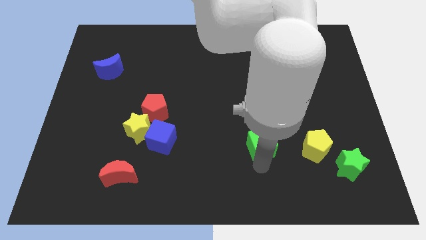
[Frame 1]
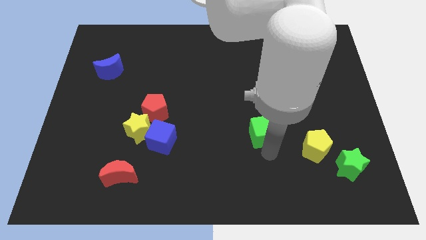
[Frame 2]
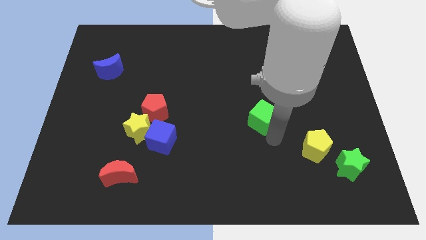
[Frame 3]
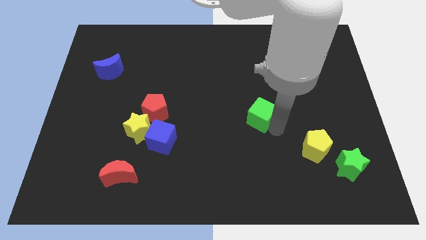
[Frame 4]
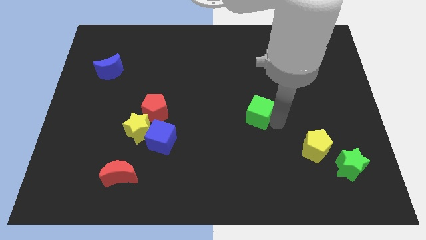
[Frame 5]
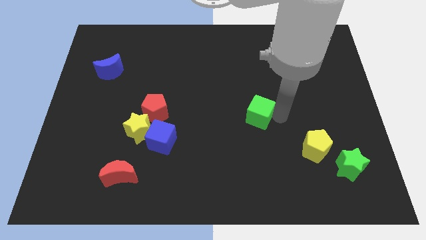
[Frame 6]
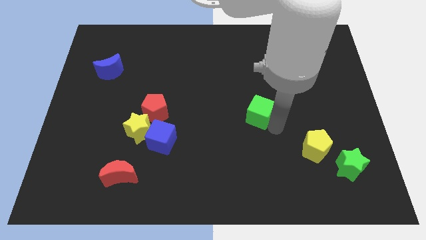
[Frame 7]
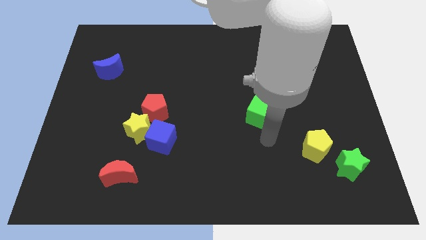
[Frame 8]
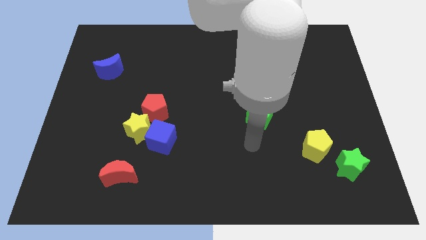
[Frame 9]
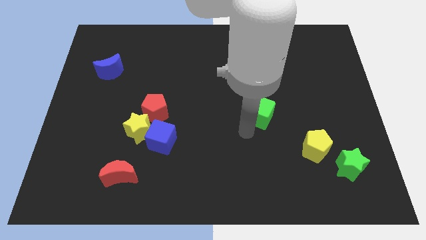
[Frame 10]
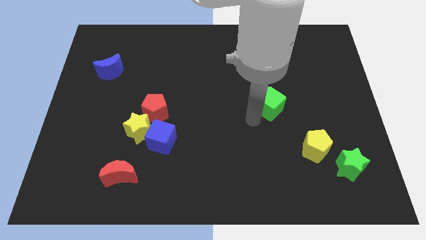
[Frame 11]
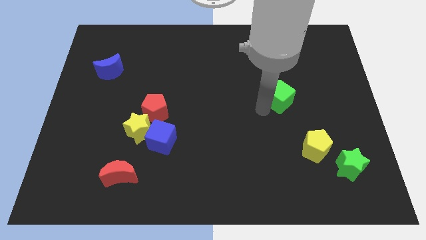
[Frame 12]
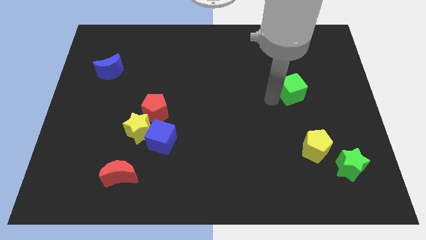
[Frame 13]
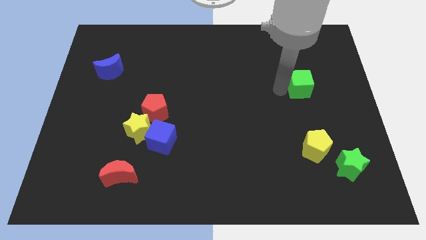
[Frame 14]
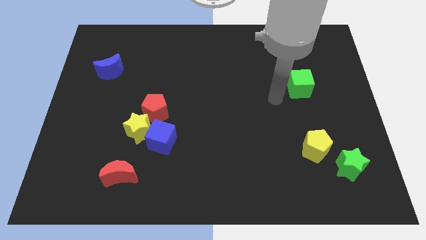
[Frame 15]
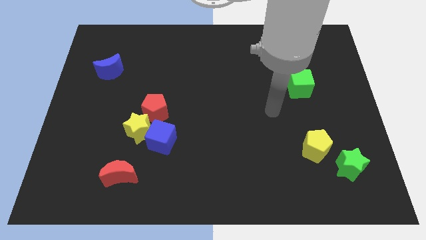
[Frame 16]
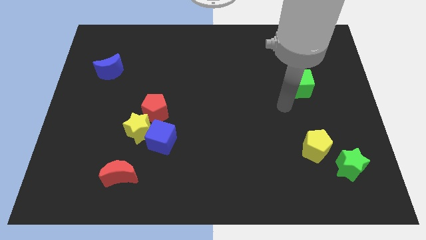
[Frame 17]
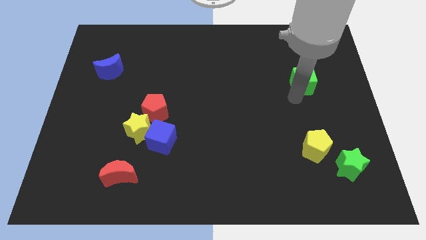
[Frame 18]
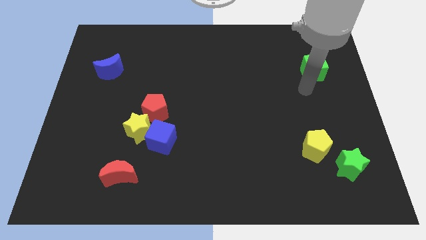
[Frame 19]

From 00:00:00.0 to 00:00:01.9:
move the green cube parallel top to the yellow pentagon

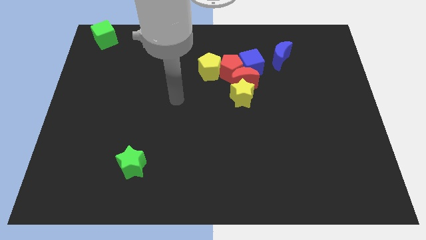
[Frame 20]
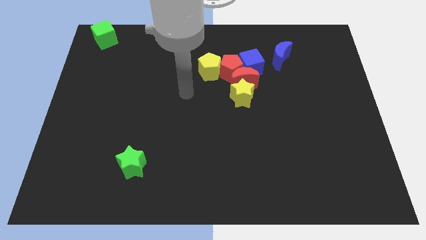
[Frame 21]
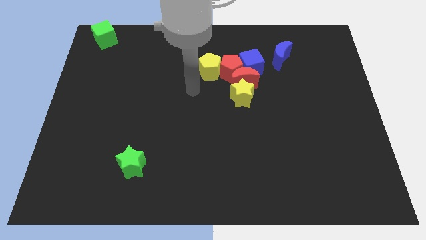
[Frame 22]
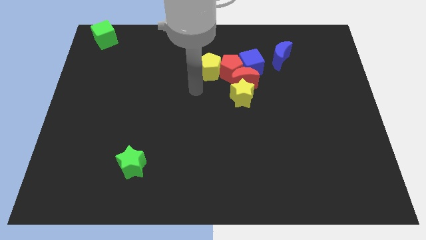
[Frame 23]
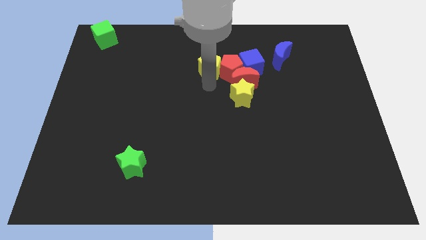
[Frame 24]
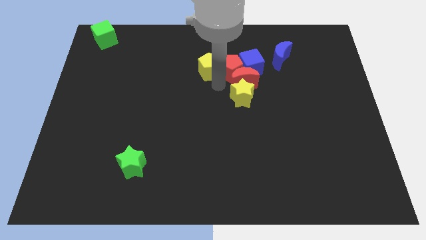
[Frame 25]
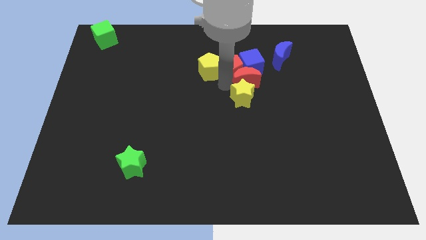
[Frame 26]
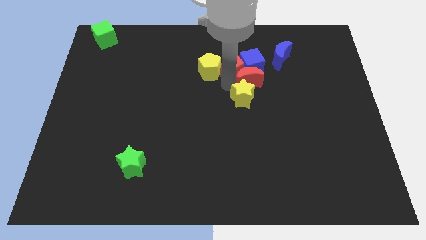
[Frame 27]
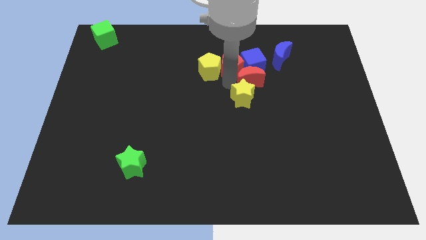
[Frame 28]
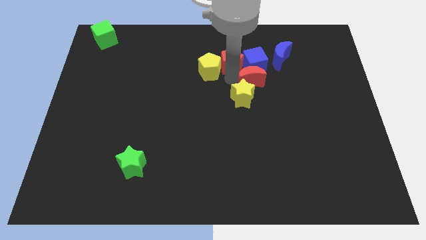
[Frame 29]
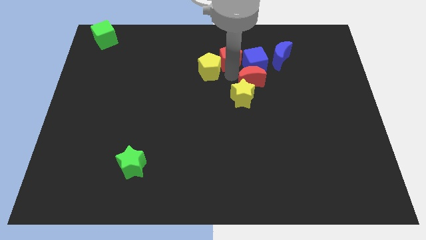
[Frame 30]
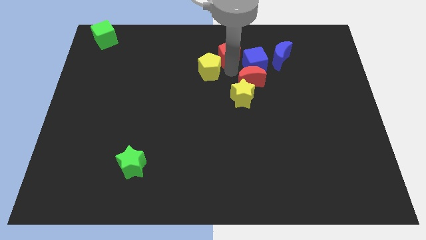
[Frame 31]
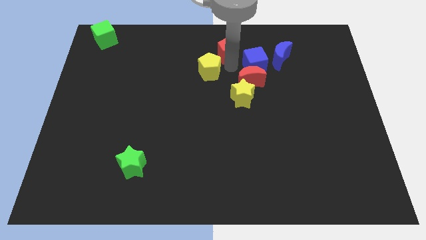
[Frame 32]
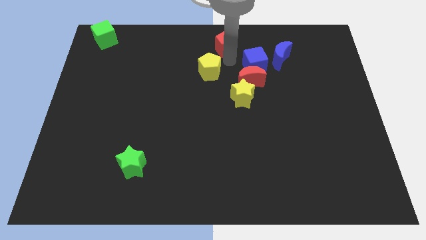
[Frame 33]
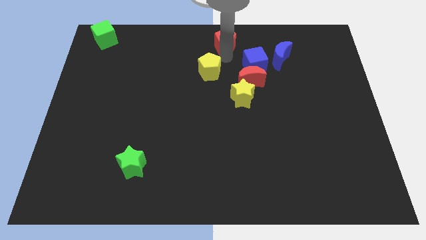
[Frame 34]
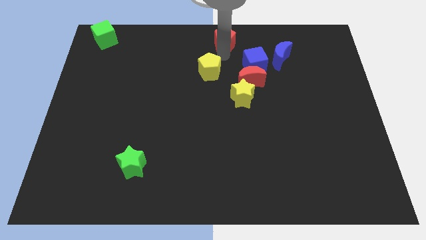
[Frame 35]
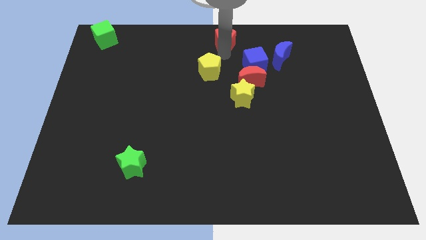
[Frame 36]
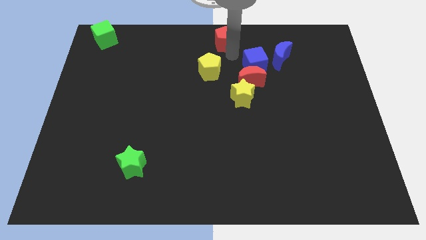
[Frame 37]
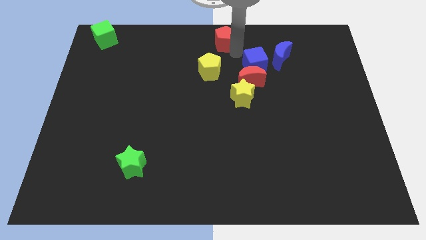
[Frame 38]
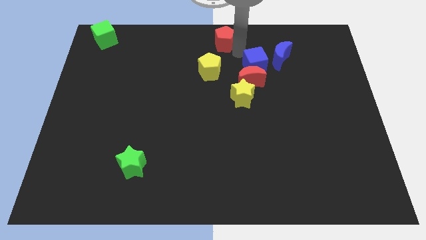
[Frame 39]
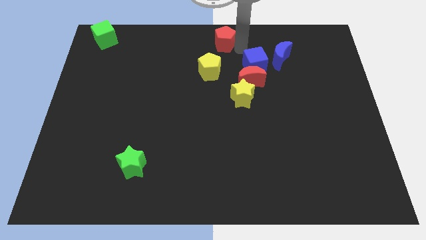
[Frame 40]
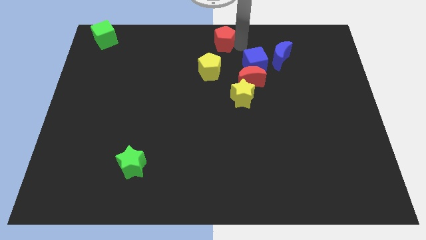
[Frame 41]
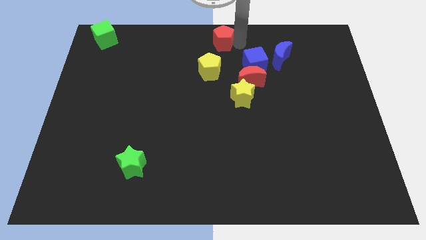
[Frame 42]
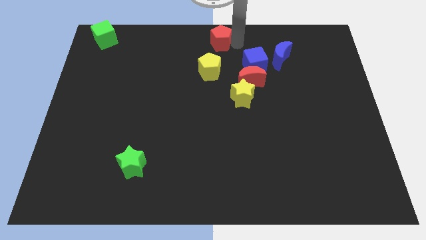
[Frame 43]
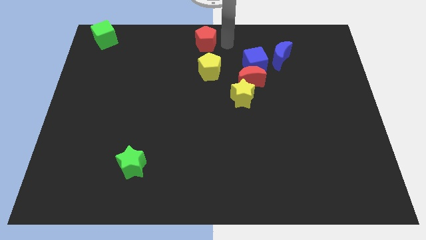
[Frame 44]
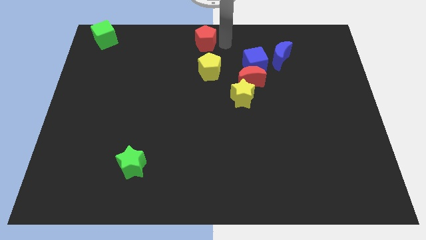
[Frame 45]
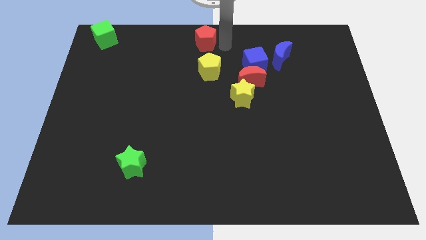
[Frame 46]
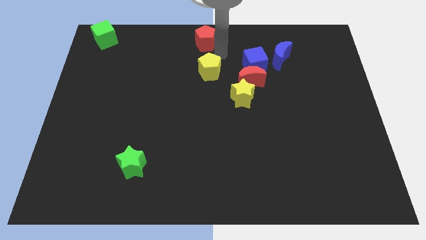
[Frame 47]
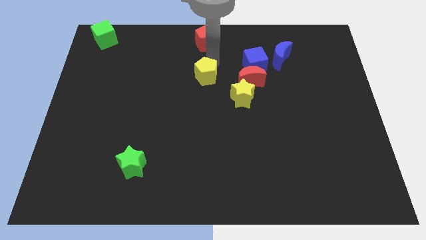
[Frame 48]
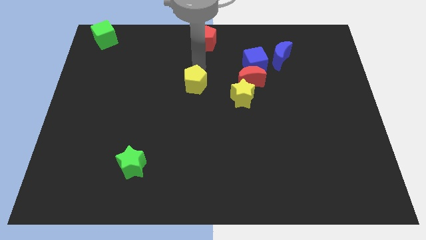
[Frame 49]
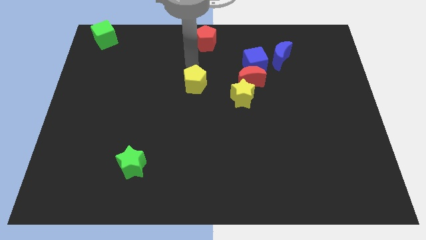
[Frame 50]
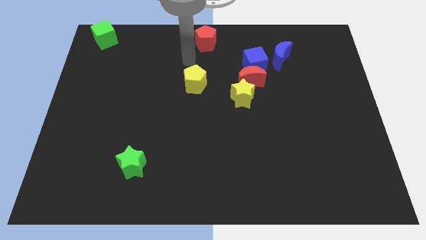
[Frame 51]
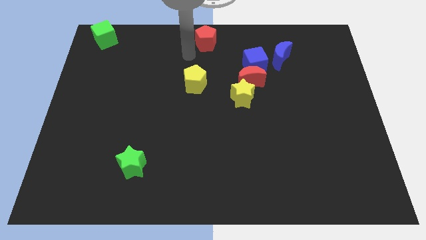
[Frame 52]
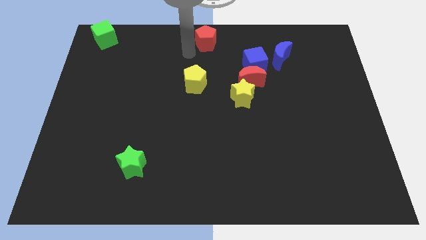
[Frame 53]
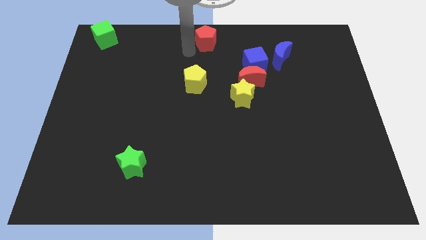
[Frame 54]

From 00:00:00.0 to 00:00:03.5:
place red and yellow pentagon in a vertical line

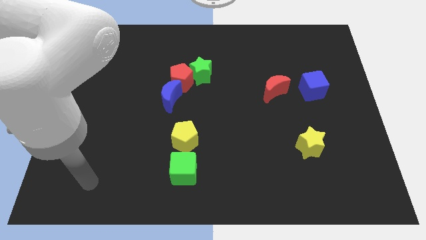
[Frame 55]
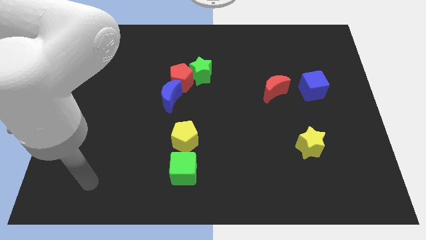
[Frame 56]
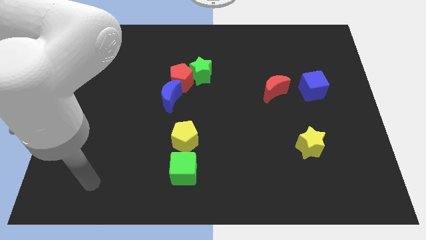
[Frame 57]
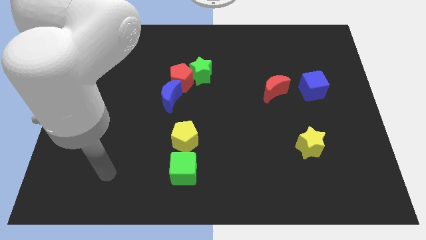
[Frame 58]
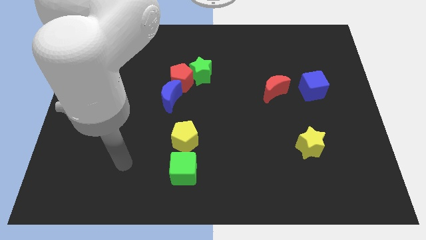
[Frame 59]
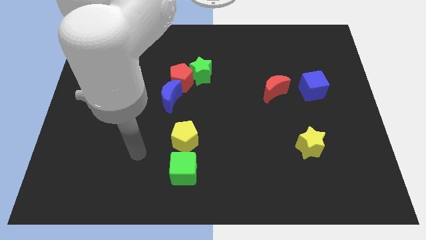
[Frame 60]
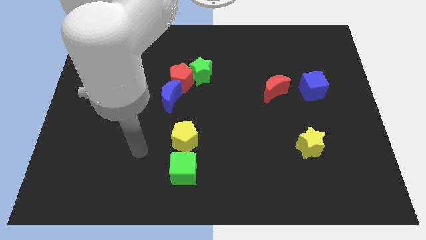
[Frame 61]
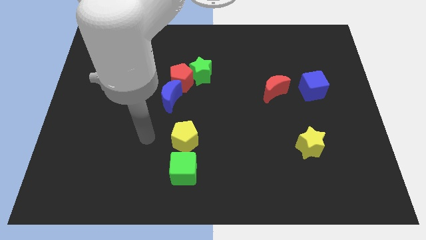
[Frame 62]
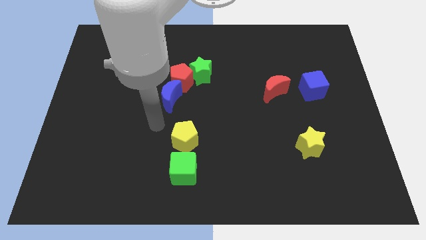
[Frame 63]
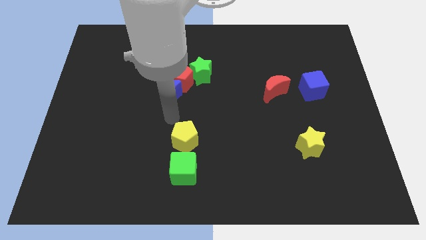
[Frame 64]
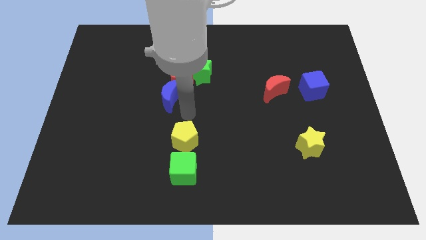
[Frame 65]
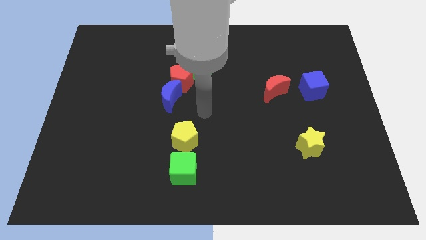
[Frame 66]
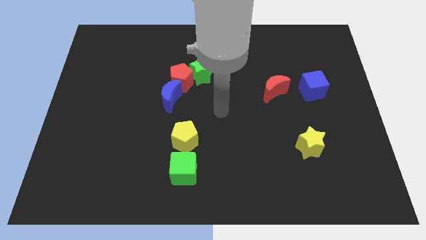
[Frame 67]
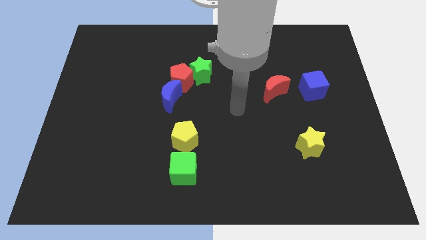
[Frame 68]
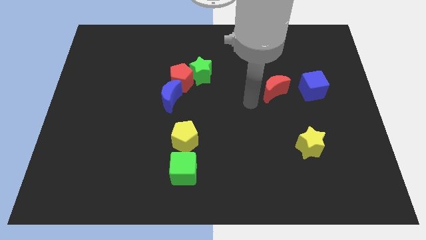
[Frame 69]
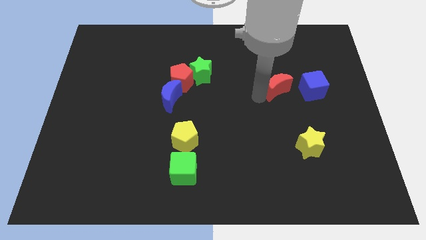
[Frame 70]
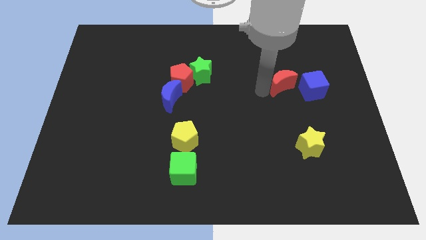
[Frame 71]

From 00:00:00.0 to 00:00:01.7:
move your arm towards the red moon

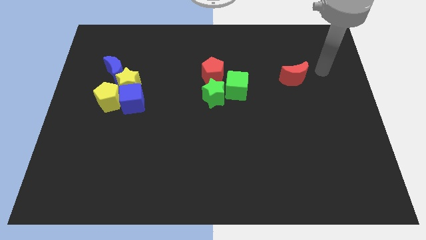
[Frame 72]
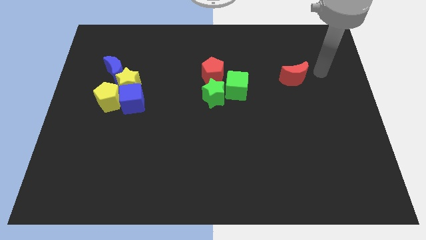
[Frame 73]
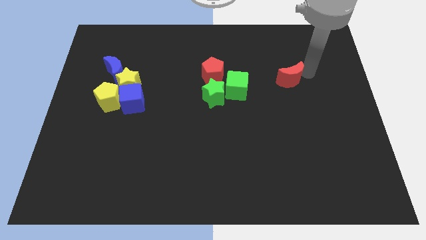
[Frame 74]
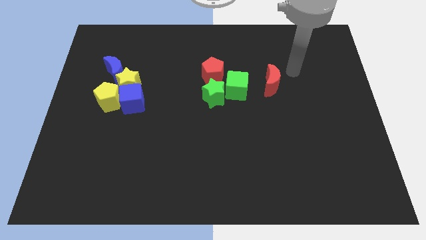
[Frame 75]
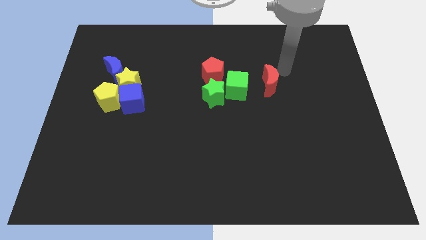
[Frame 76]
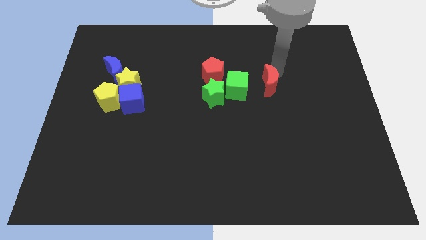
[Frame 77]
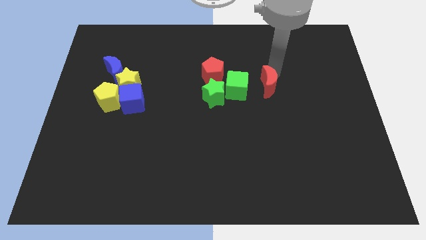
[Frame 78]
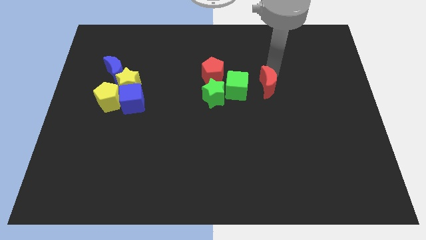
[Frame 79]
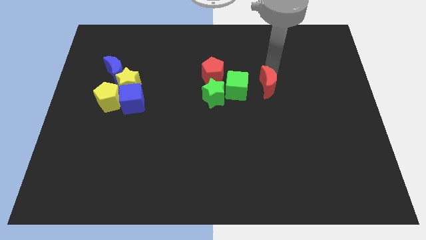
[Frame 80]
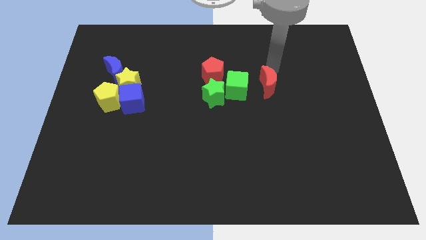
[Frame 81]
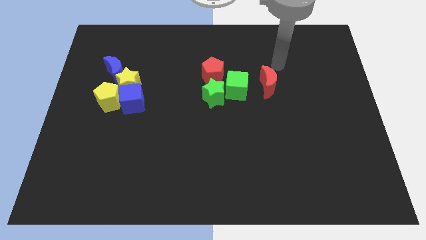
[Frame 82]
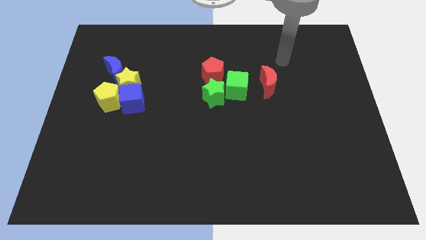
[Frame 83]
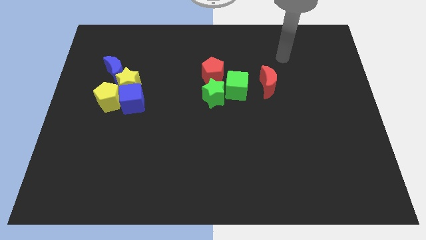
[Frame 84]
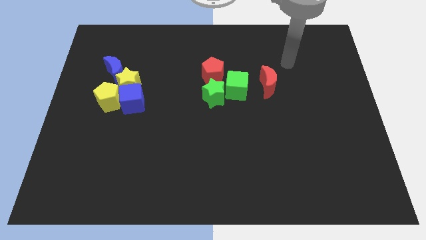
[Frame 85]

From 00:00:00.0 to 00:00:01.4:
move red moon to the right of the green cube

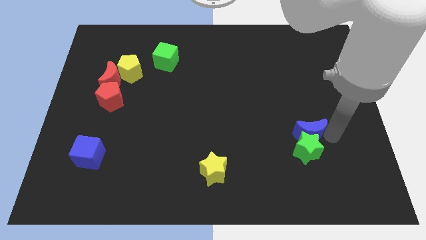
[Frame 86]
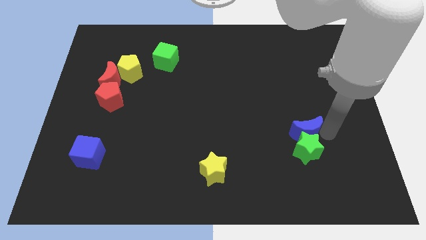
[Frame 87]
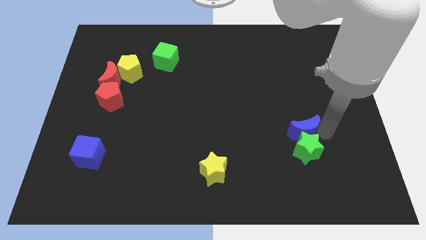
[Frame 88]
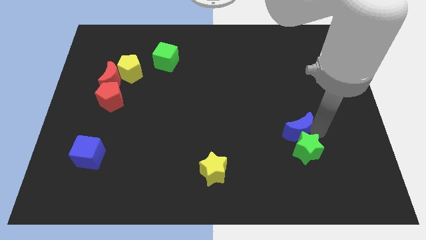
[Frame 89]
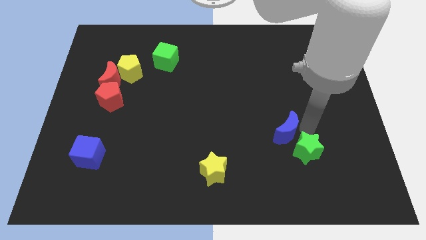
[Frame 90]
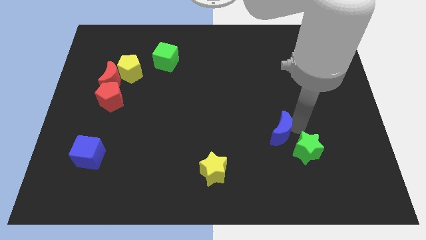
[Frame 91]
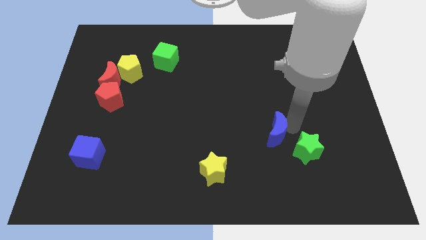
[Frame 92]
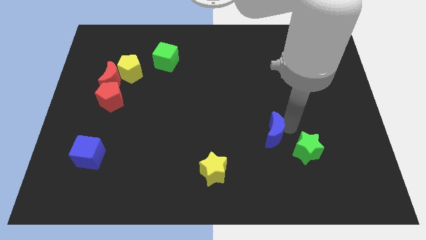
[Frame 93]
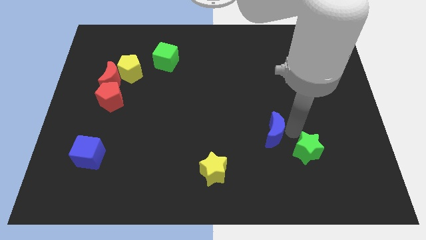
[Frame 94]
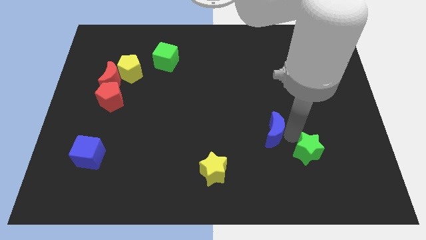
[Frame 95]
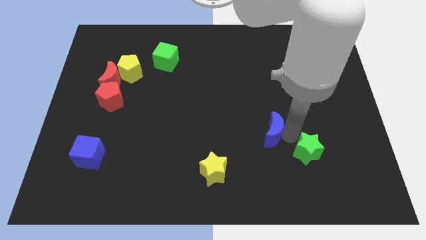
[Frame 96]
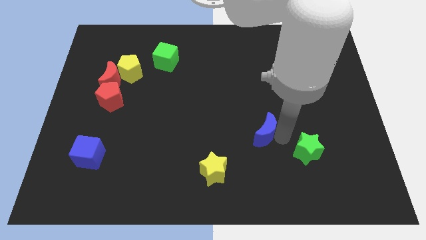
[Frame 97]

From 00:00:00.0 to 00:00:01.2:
separate the blue moon and green star
